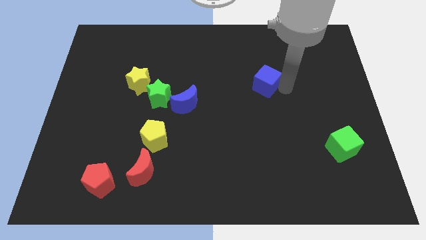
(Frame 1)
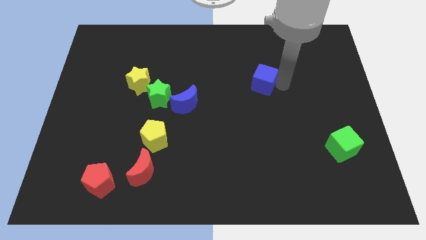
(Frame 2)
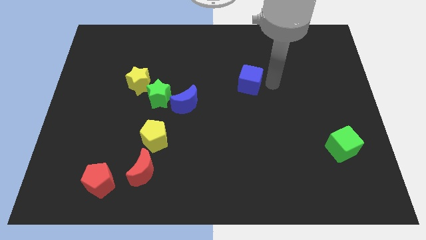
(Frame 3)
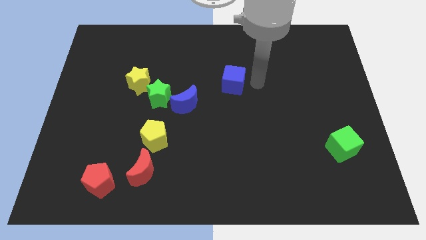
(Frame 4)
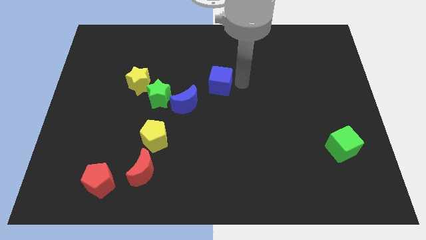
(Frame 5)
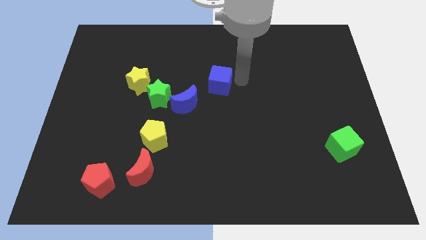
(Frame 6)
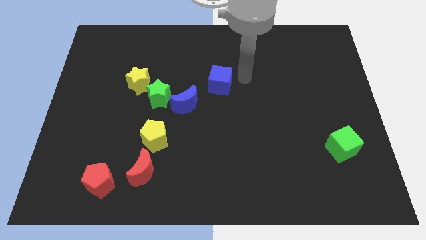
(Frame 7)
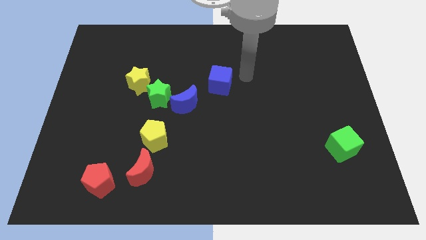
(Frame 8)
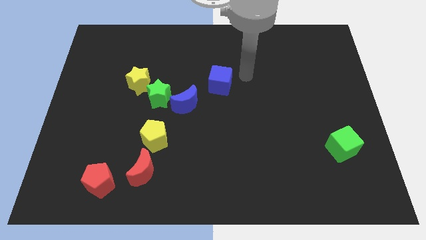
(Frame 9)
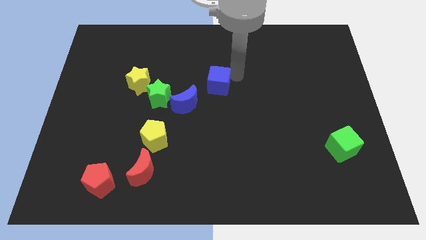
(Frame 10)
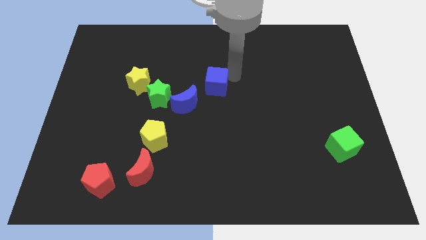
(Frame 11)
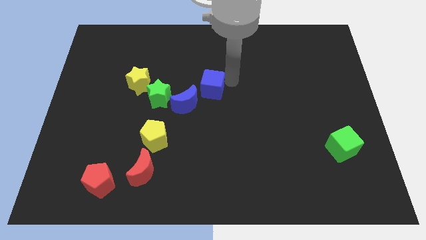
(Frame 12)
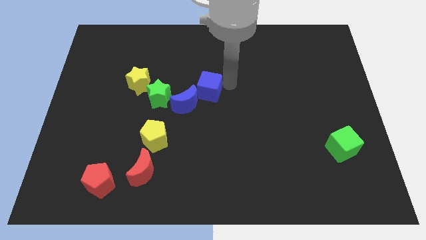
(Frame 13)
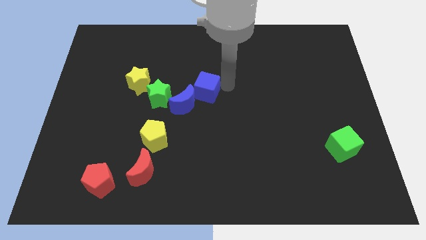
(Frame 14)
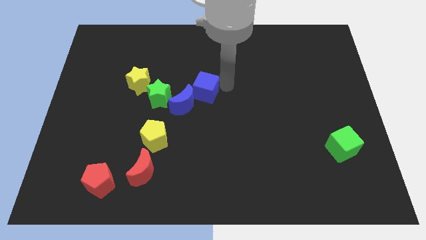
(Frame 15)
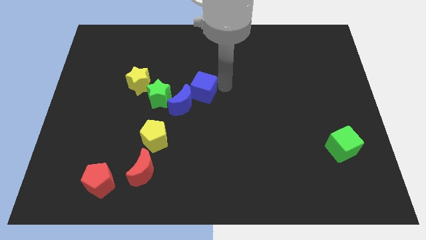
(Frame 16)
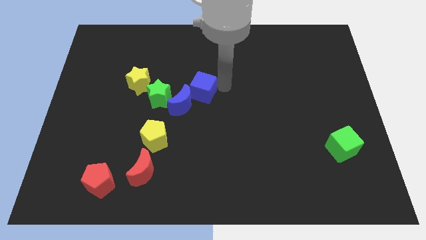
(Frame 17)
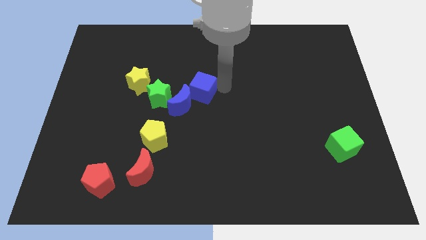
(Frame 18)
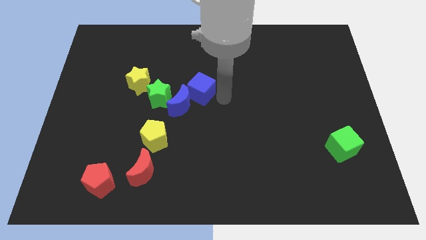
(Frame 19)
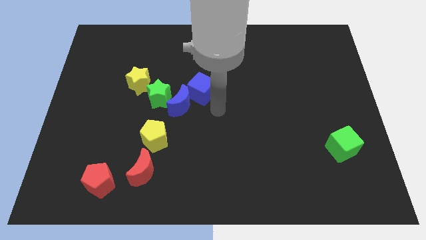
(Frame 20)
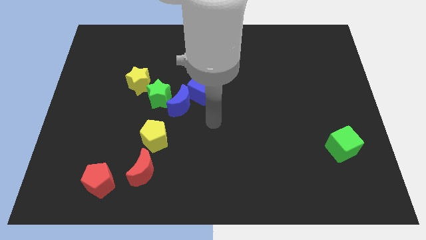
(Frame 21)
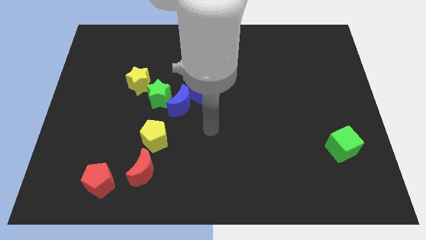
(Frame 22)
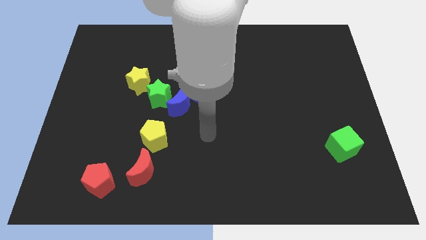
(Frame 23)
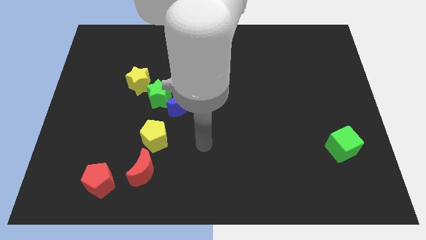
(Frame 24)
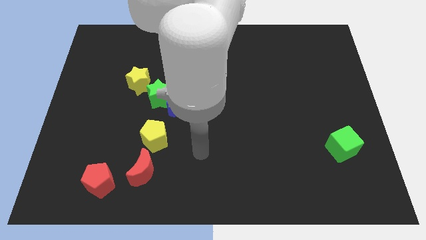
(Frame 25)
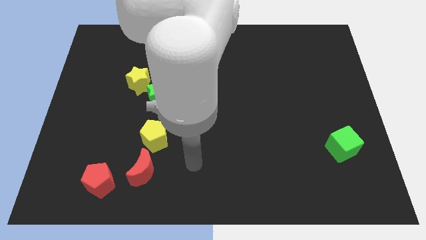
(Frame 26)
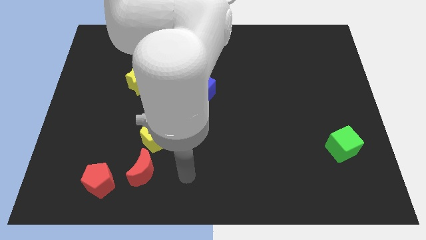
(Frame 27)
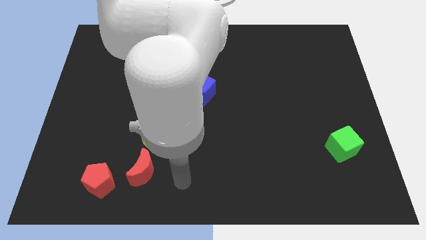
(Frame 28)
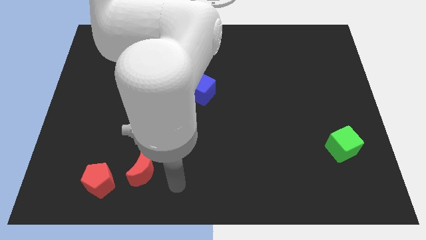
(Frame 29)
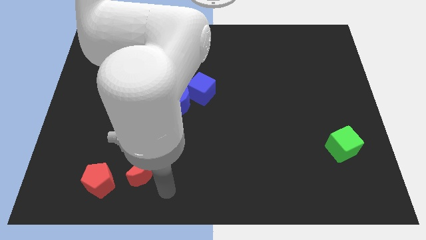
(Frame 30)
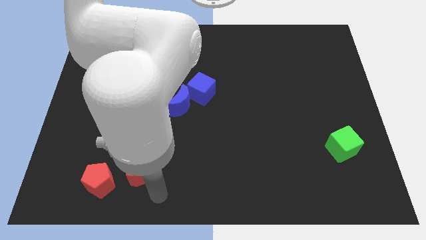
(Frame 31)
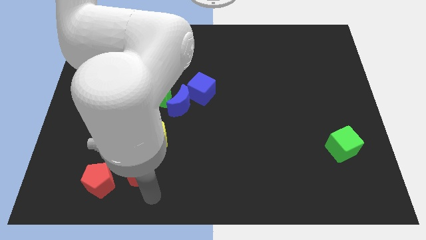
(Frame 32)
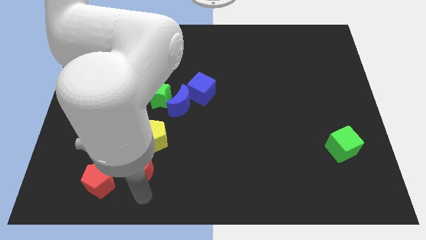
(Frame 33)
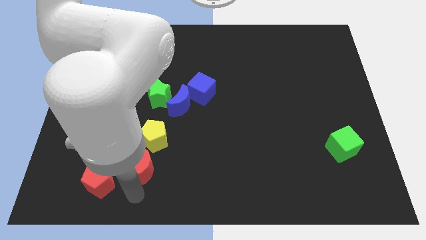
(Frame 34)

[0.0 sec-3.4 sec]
push blue cube towards the blue crescent

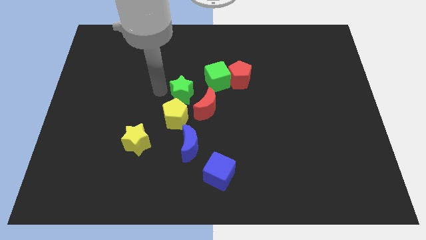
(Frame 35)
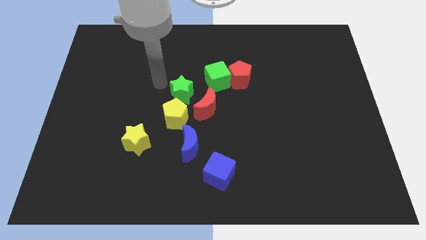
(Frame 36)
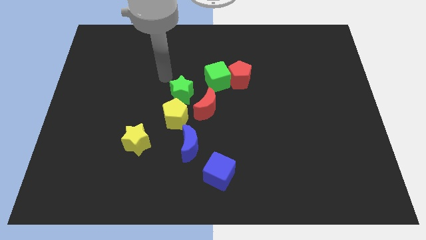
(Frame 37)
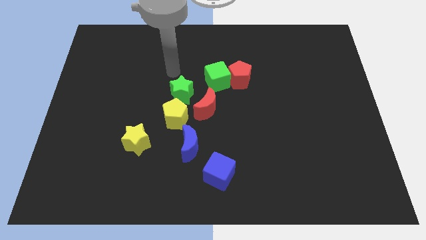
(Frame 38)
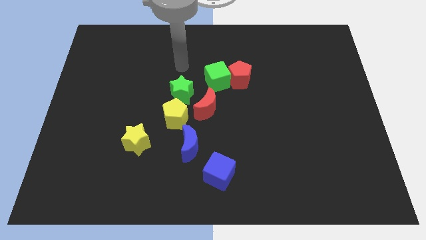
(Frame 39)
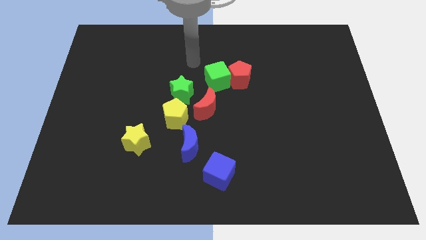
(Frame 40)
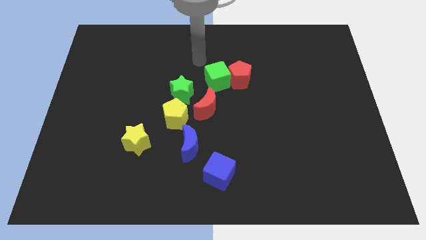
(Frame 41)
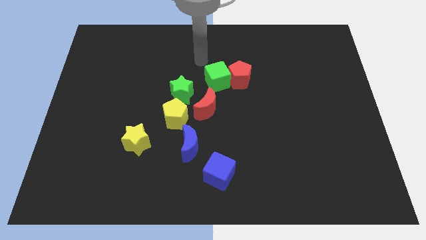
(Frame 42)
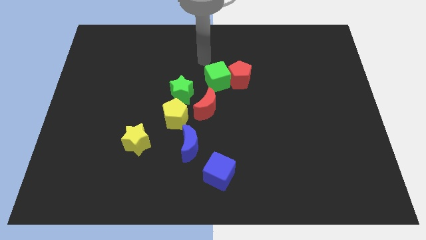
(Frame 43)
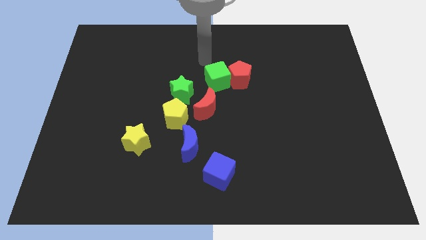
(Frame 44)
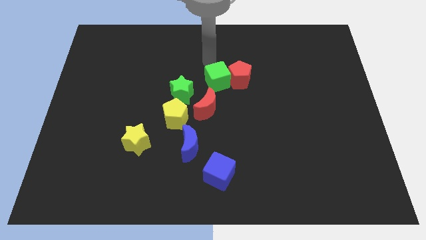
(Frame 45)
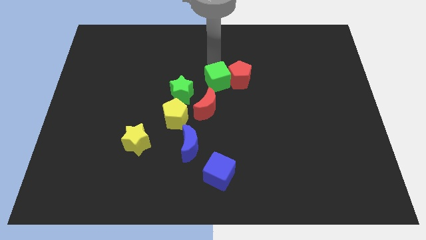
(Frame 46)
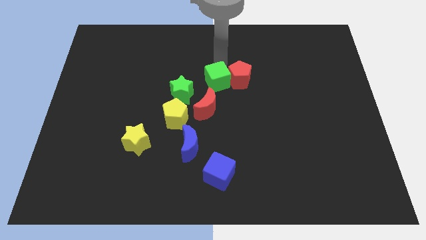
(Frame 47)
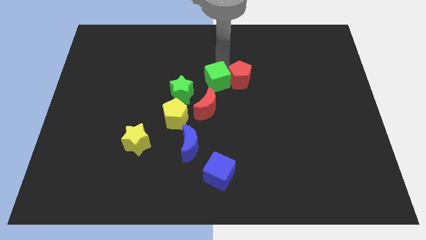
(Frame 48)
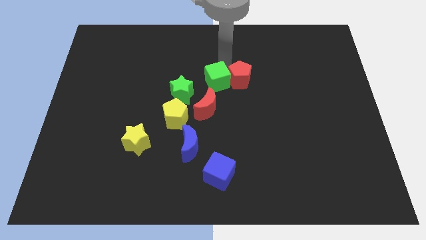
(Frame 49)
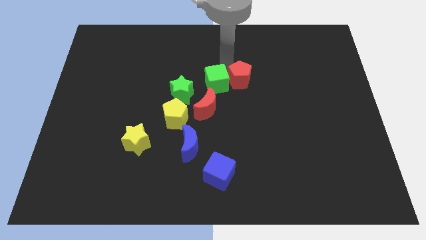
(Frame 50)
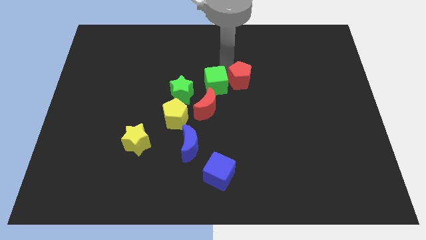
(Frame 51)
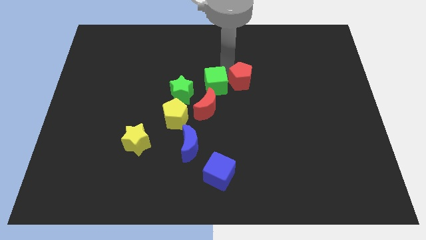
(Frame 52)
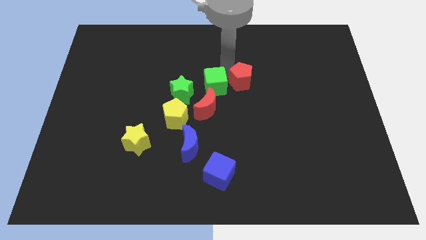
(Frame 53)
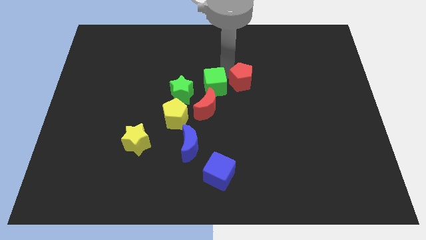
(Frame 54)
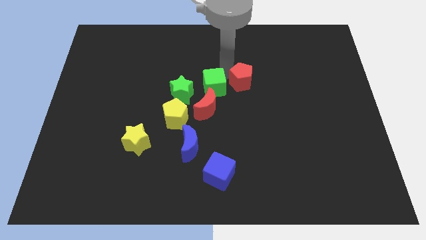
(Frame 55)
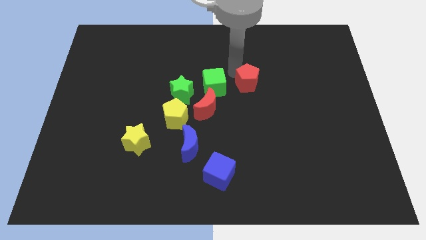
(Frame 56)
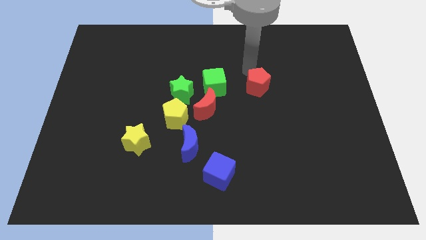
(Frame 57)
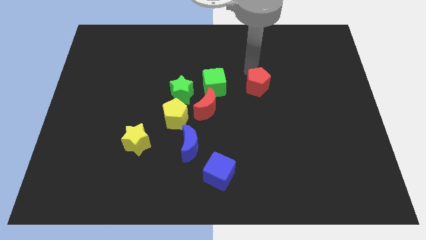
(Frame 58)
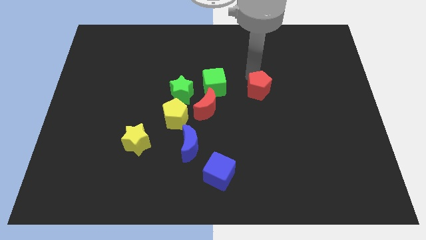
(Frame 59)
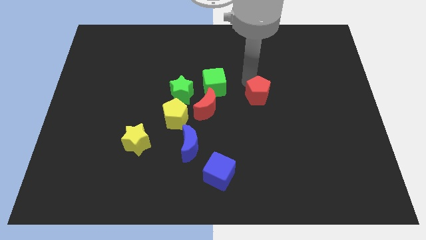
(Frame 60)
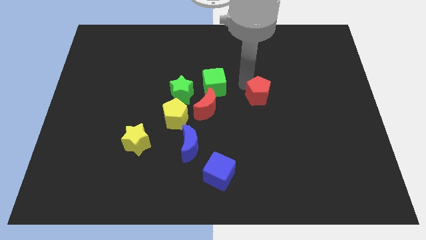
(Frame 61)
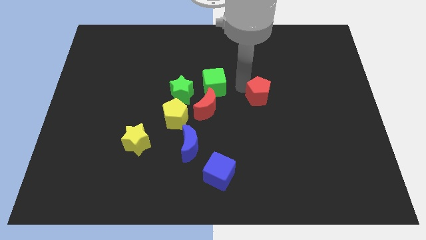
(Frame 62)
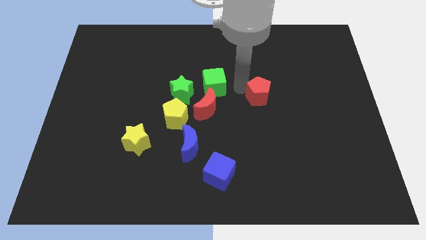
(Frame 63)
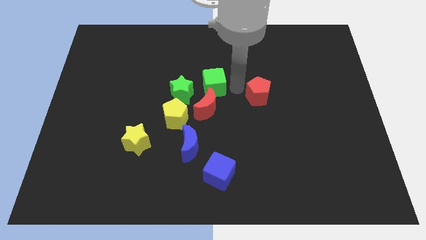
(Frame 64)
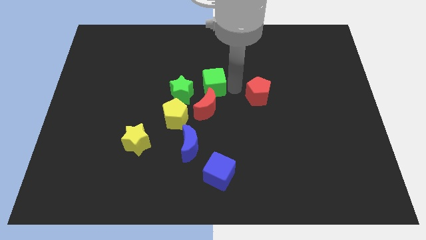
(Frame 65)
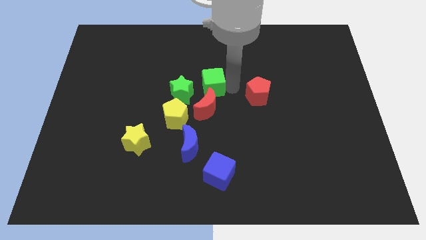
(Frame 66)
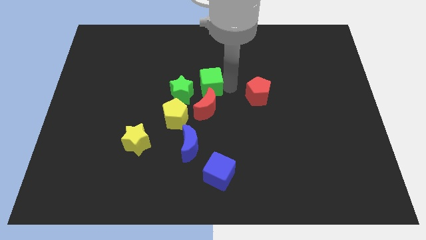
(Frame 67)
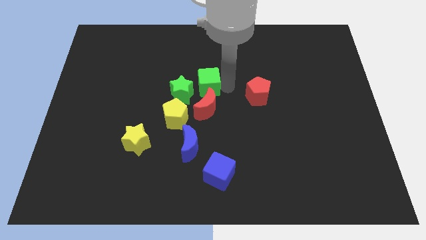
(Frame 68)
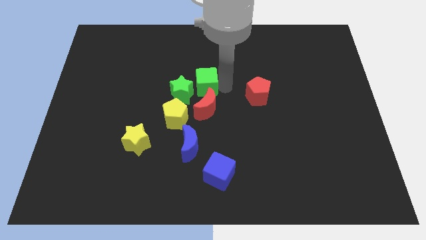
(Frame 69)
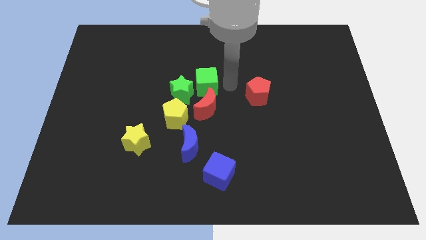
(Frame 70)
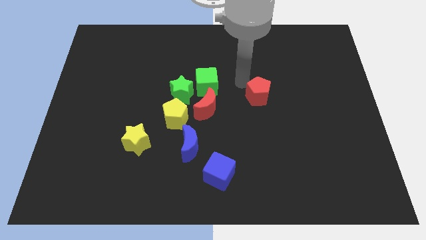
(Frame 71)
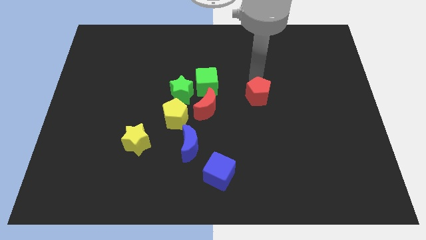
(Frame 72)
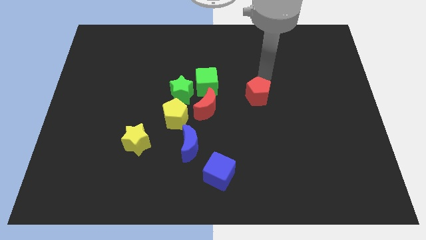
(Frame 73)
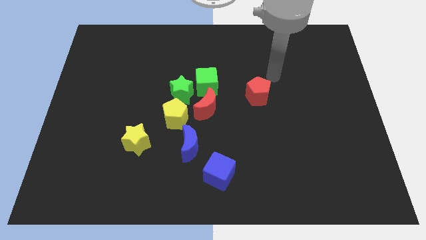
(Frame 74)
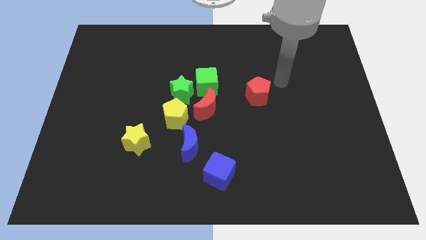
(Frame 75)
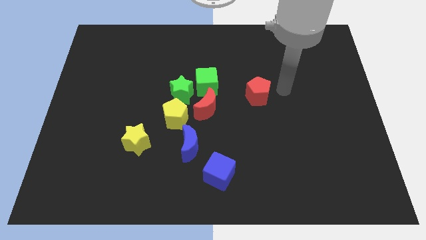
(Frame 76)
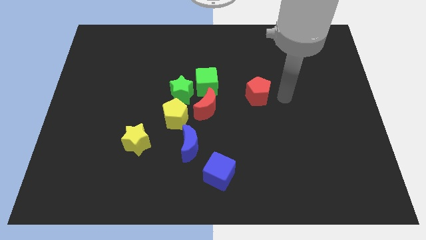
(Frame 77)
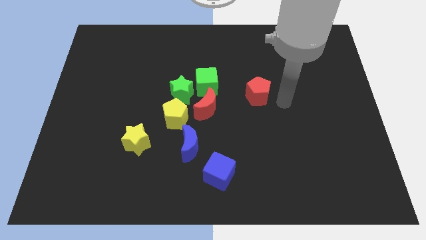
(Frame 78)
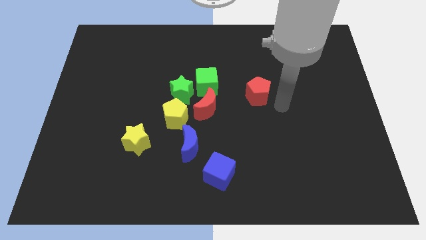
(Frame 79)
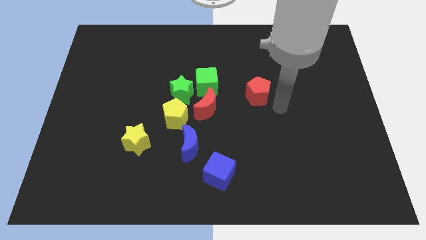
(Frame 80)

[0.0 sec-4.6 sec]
move the red pentagon towards the center of the board

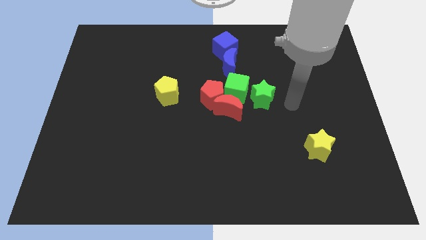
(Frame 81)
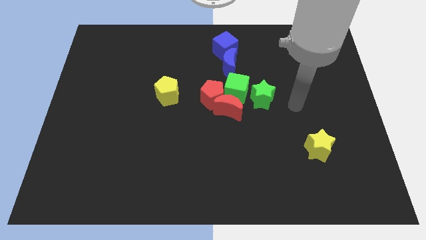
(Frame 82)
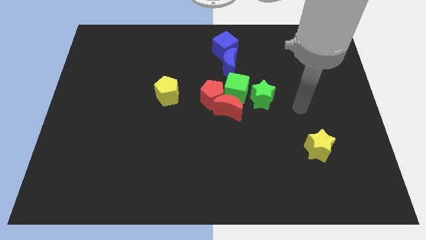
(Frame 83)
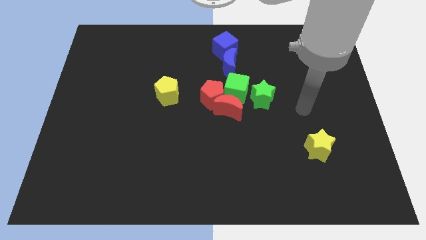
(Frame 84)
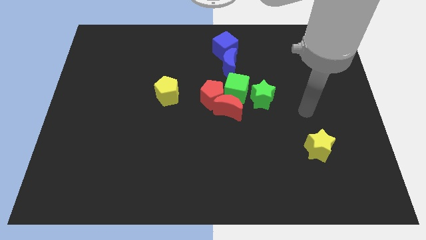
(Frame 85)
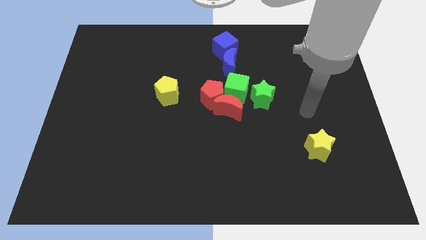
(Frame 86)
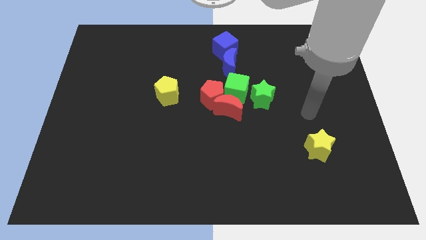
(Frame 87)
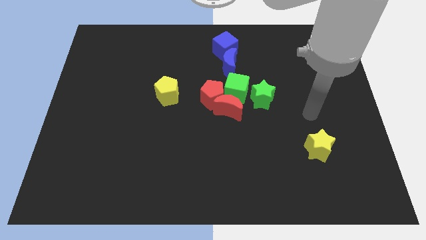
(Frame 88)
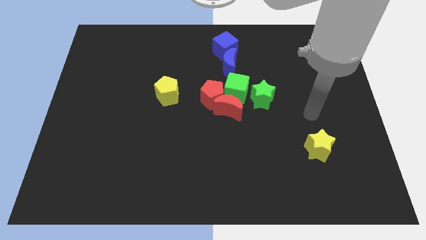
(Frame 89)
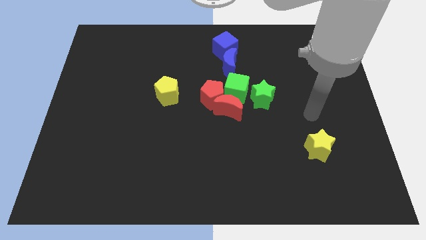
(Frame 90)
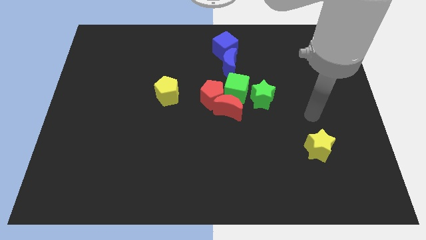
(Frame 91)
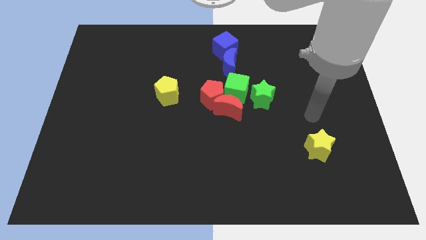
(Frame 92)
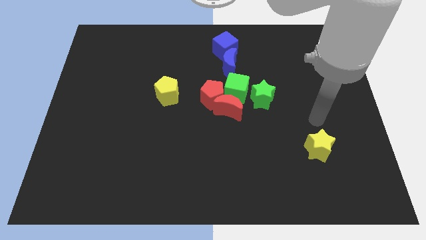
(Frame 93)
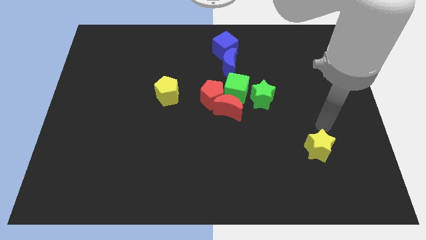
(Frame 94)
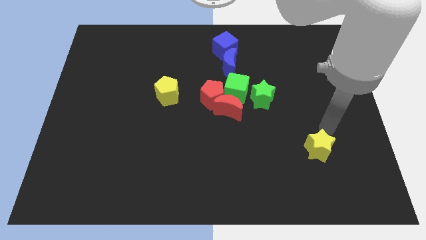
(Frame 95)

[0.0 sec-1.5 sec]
place the arm on the top of the yellow star
